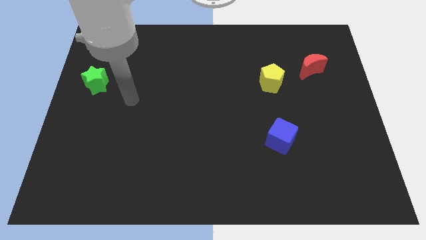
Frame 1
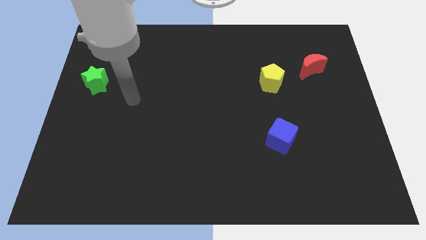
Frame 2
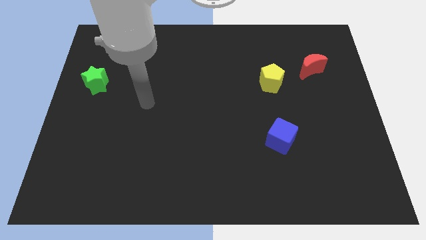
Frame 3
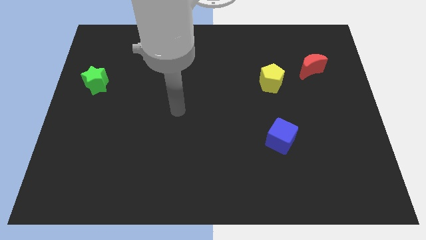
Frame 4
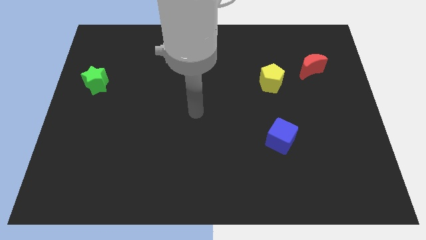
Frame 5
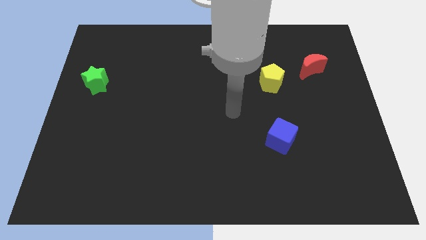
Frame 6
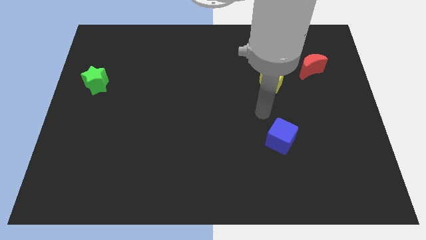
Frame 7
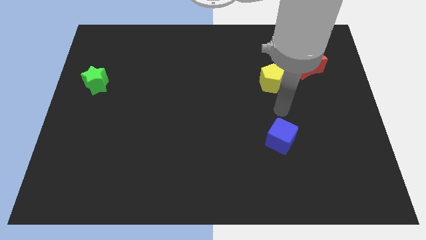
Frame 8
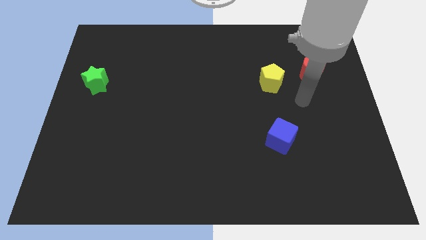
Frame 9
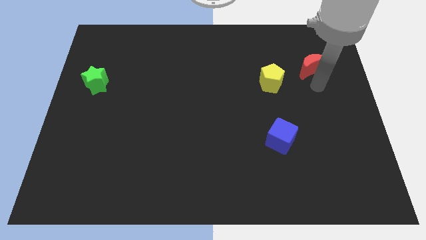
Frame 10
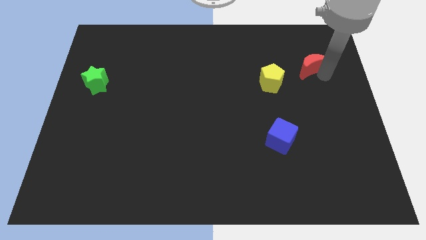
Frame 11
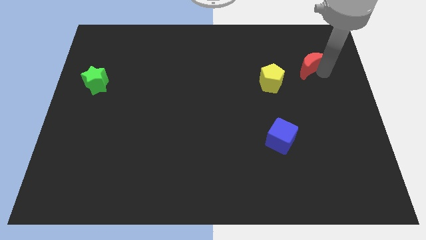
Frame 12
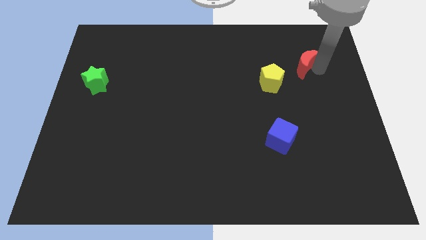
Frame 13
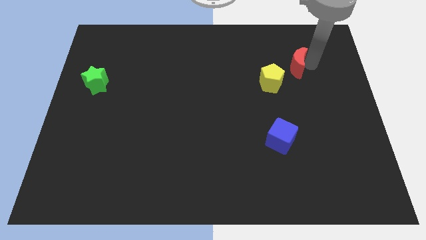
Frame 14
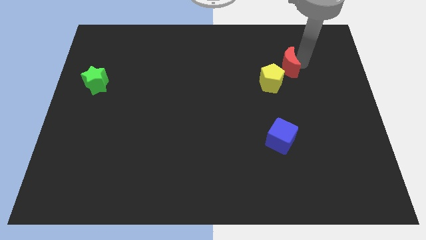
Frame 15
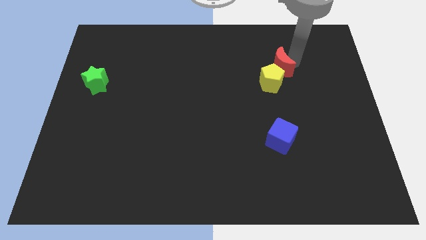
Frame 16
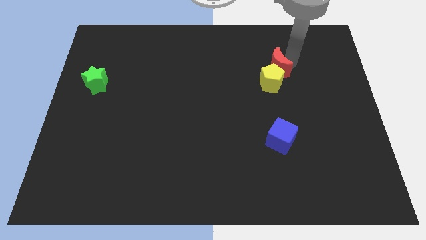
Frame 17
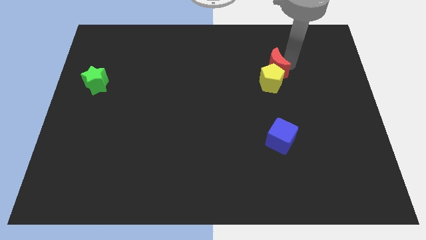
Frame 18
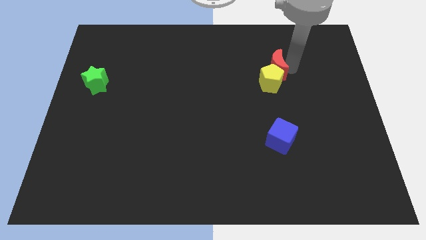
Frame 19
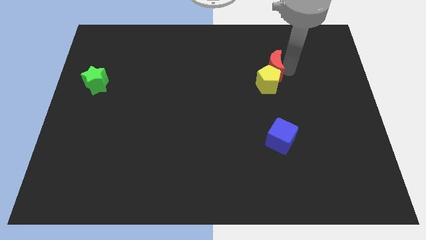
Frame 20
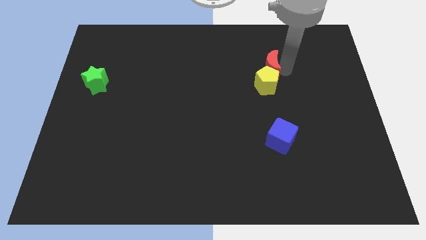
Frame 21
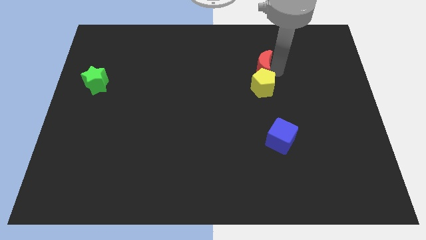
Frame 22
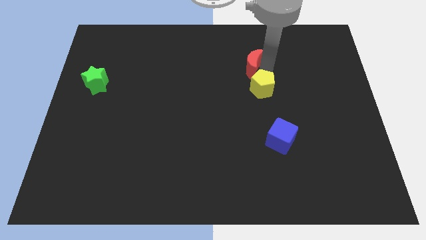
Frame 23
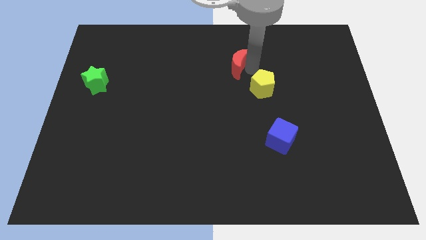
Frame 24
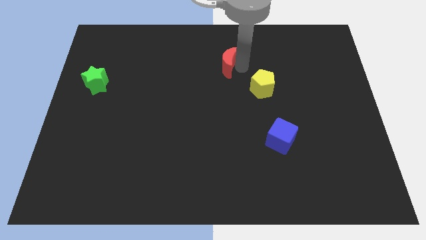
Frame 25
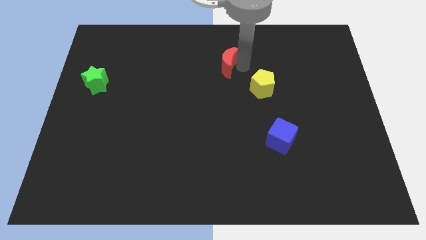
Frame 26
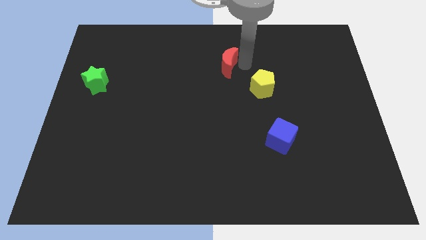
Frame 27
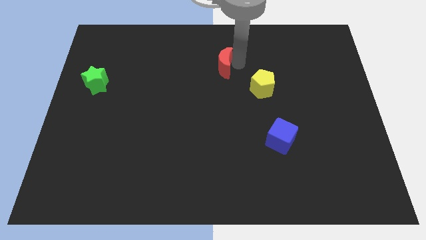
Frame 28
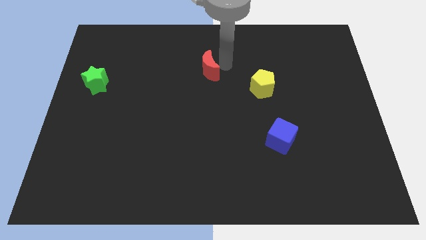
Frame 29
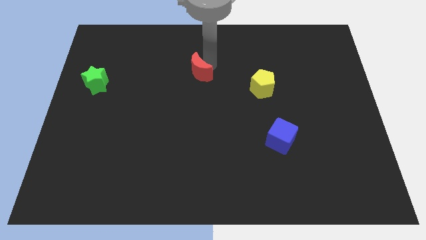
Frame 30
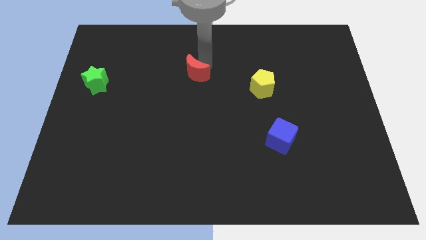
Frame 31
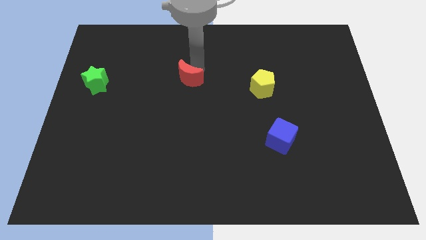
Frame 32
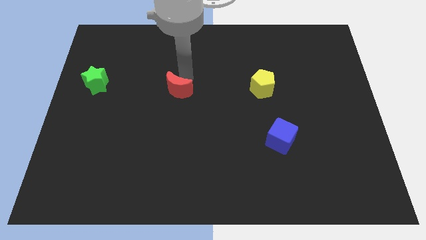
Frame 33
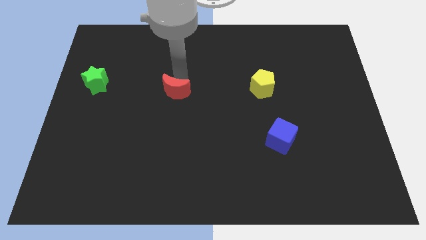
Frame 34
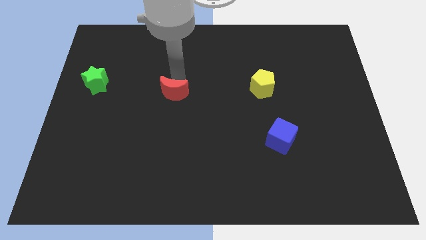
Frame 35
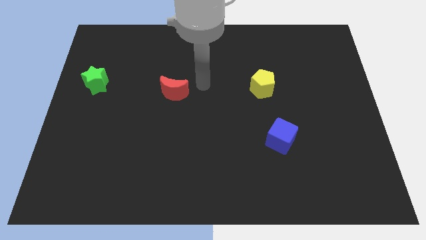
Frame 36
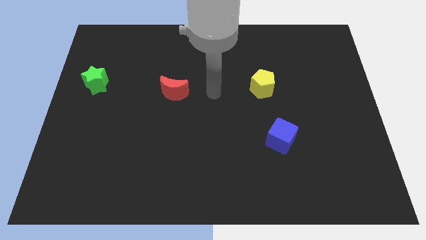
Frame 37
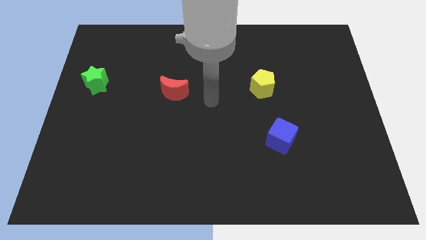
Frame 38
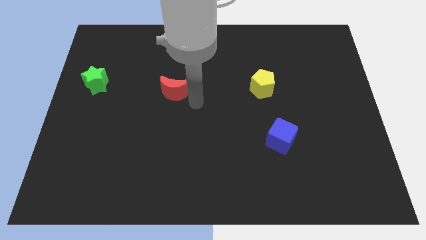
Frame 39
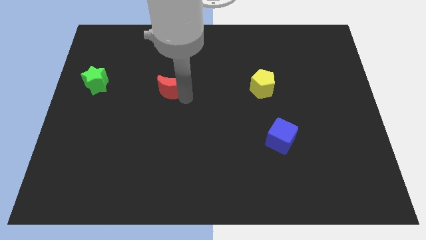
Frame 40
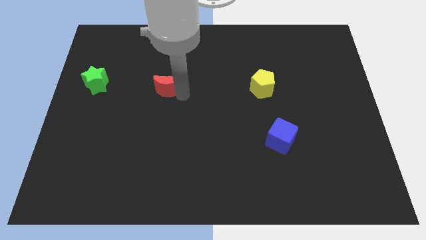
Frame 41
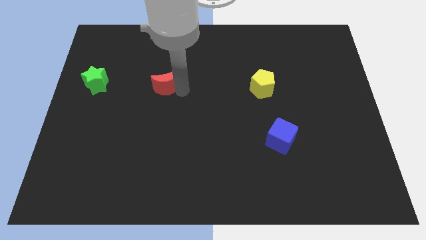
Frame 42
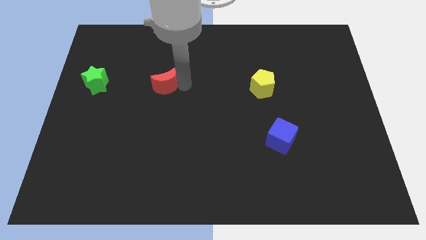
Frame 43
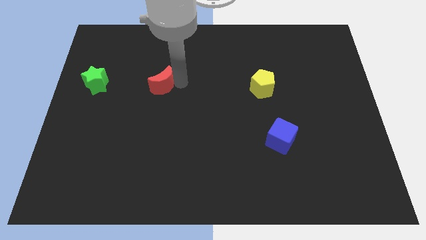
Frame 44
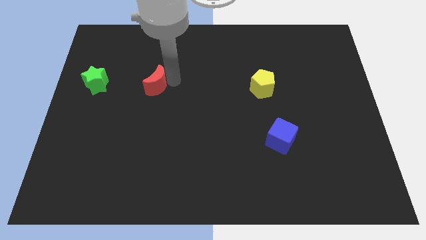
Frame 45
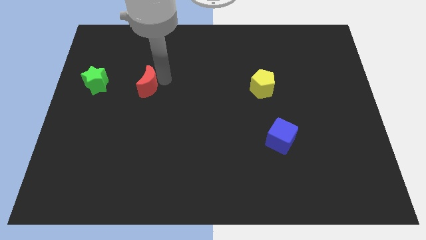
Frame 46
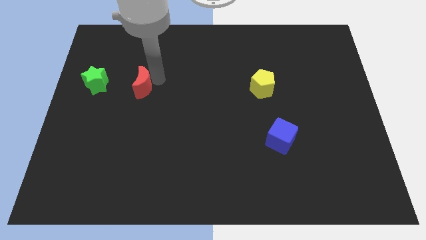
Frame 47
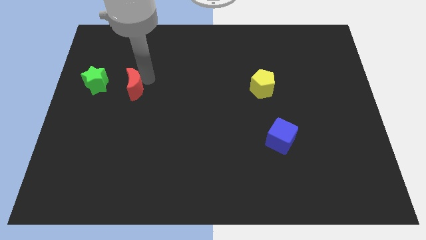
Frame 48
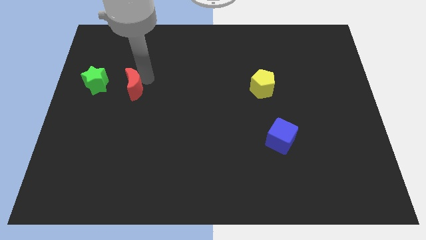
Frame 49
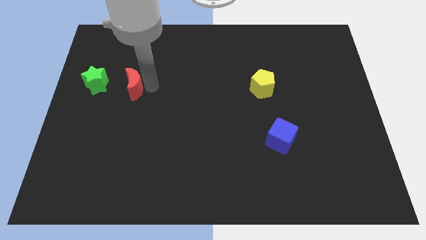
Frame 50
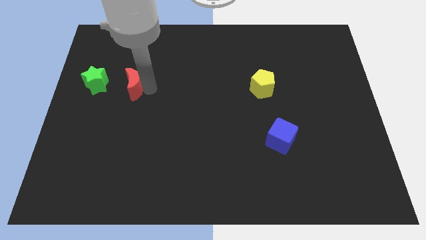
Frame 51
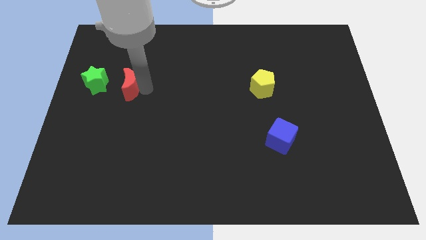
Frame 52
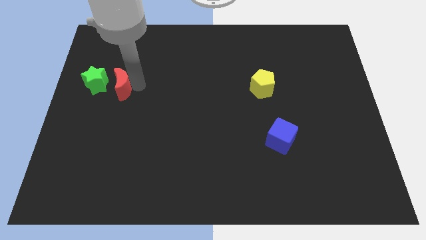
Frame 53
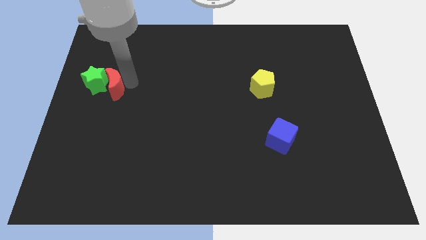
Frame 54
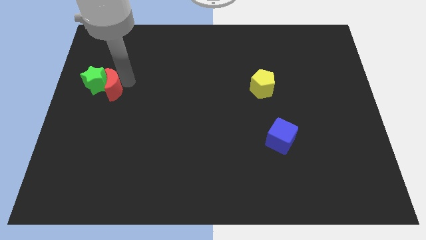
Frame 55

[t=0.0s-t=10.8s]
move the red moon to the green block

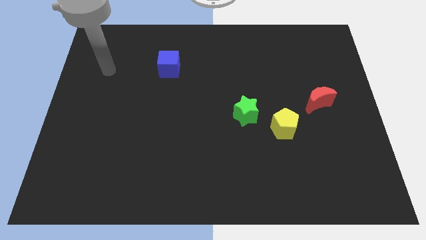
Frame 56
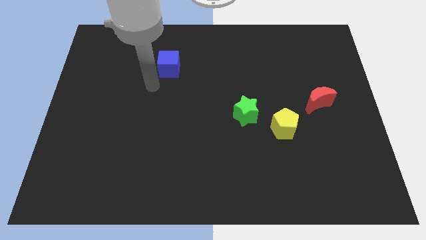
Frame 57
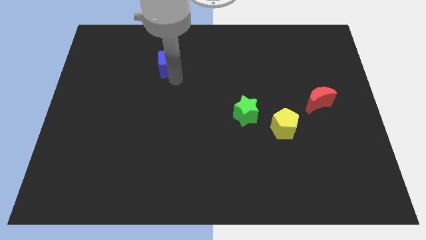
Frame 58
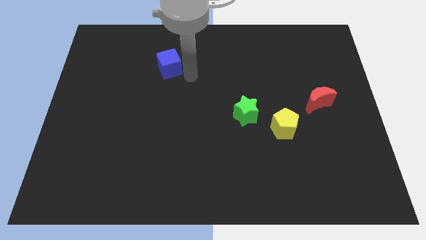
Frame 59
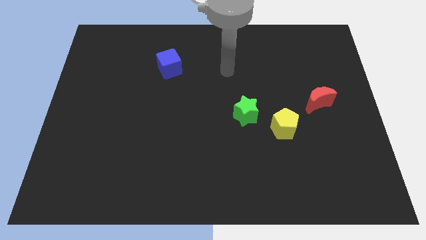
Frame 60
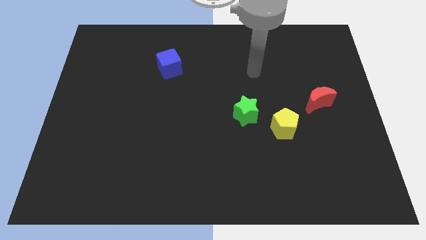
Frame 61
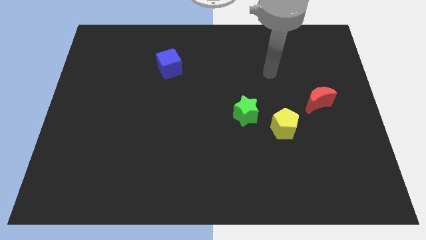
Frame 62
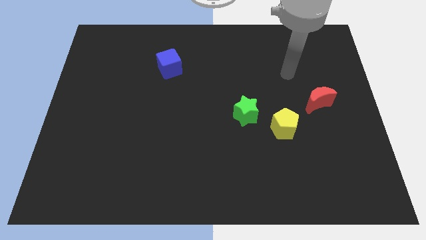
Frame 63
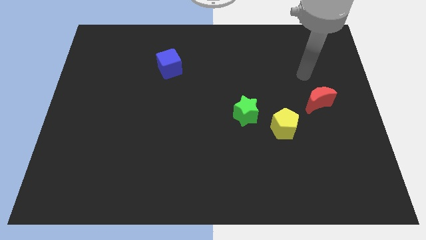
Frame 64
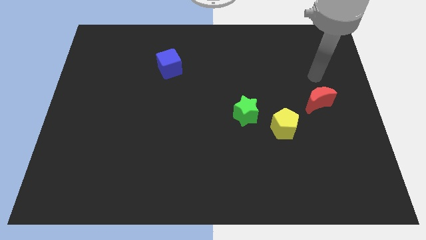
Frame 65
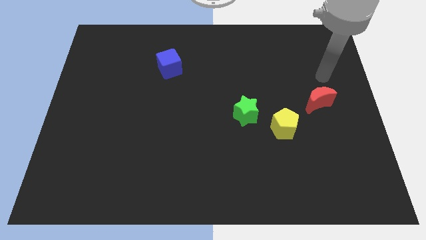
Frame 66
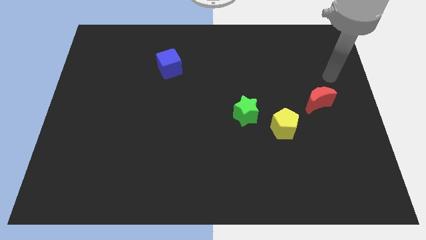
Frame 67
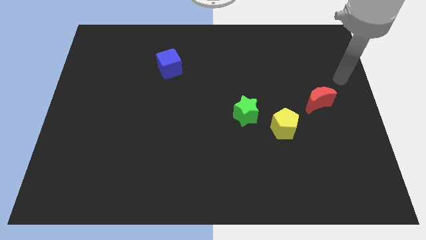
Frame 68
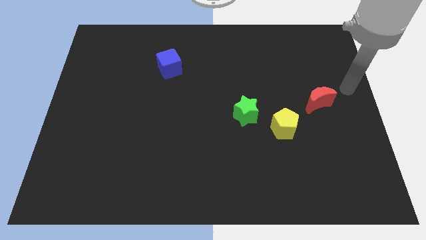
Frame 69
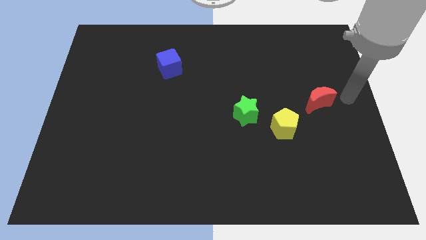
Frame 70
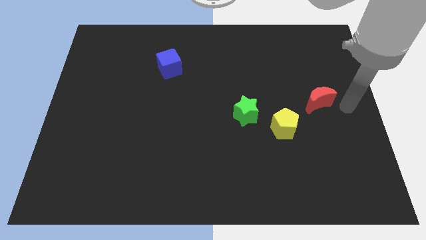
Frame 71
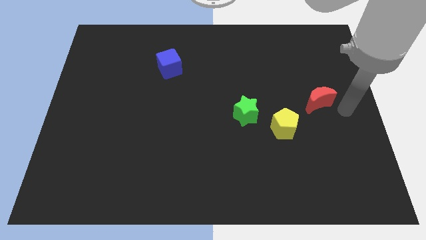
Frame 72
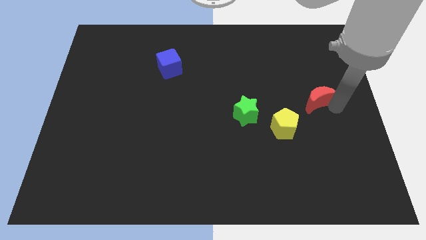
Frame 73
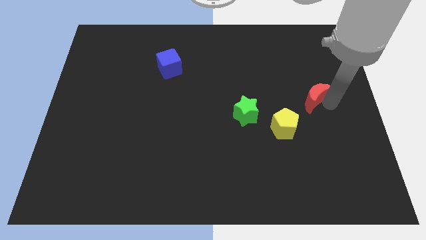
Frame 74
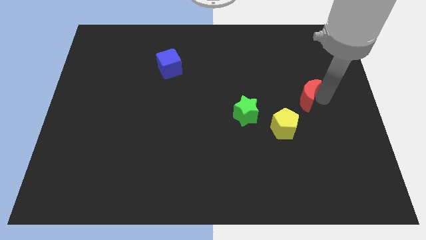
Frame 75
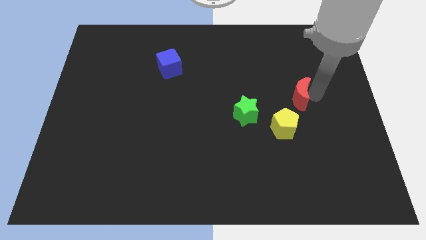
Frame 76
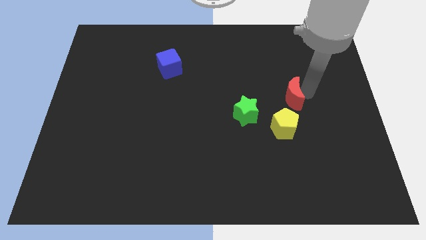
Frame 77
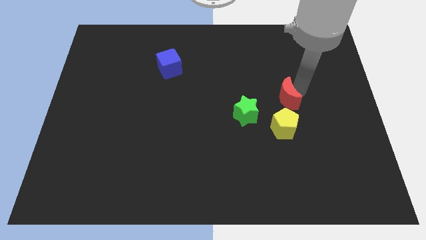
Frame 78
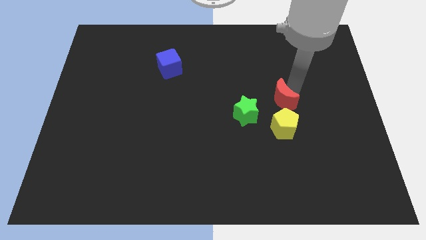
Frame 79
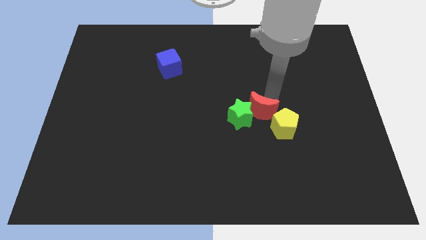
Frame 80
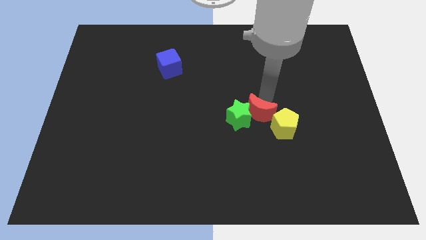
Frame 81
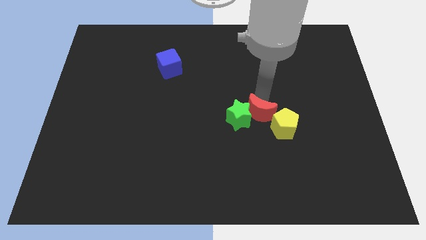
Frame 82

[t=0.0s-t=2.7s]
slide the red block close to the star

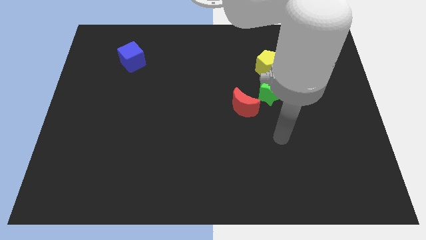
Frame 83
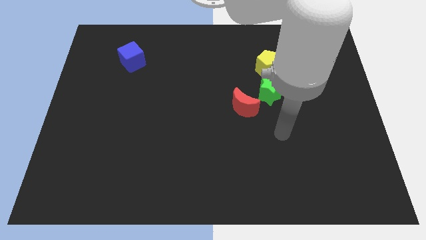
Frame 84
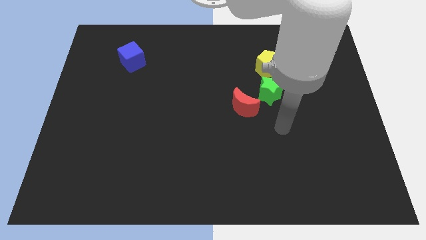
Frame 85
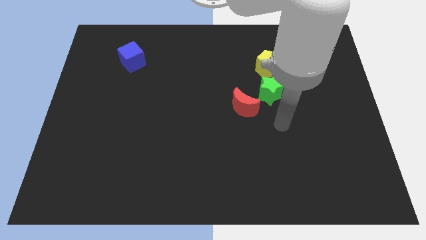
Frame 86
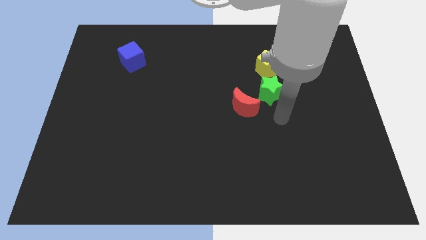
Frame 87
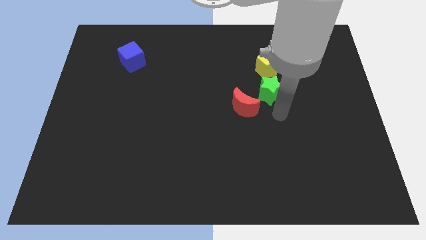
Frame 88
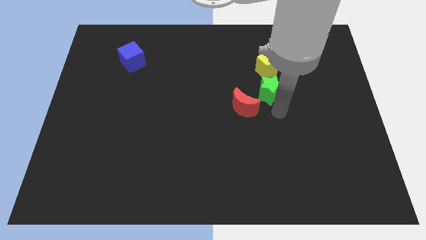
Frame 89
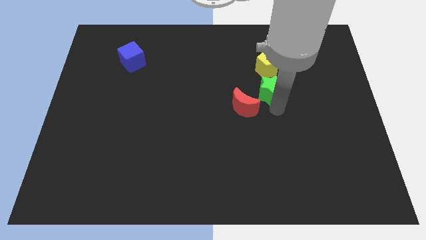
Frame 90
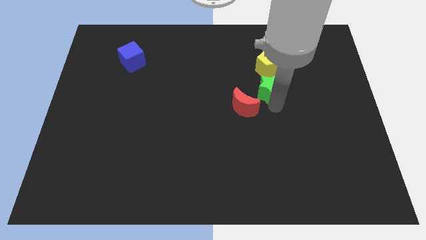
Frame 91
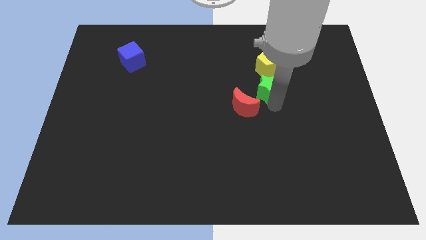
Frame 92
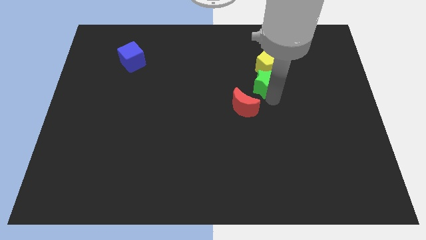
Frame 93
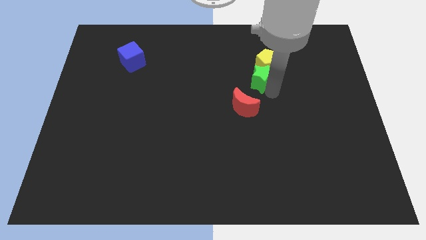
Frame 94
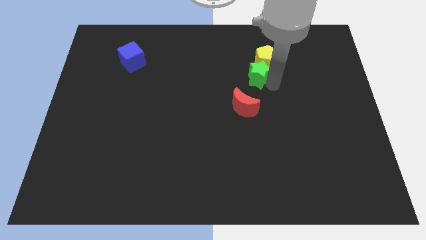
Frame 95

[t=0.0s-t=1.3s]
move the green block towards the pentagon
